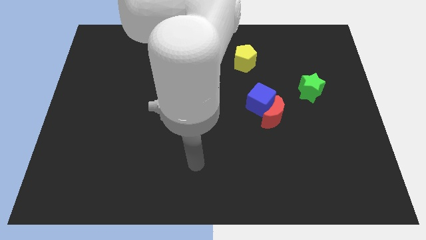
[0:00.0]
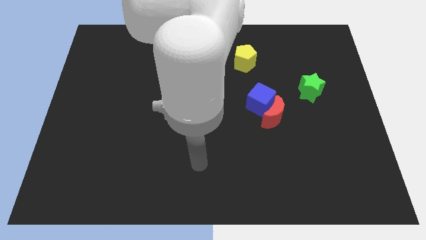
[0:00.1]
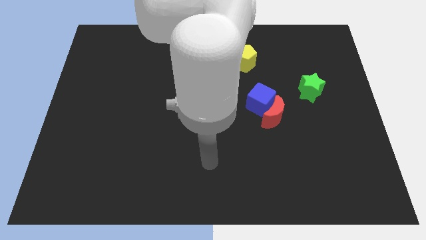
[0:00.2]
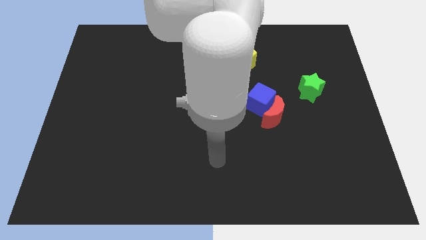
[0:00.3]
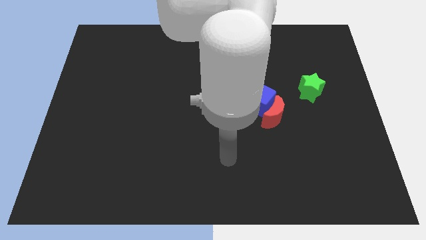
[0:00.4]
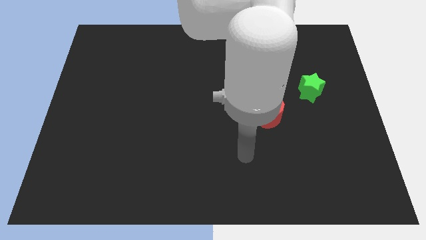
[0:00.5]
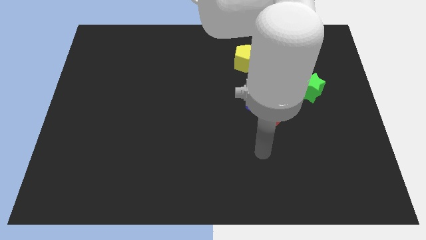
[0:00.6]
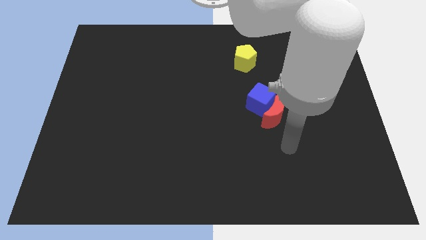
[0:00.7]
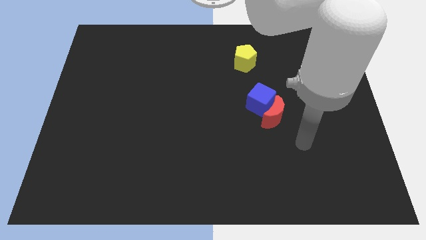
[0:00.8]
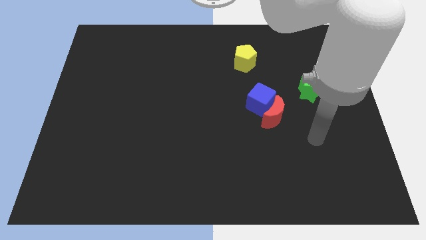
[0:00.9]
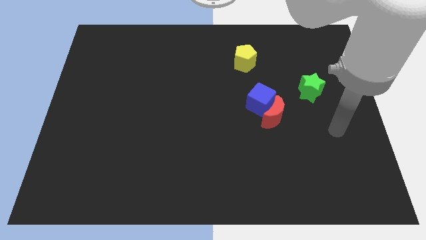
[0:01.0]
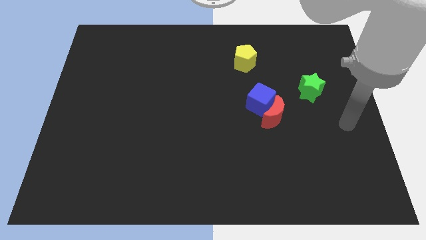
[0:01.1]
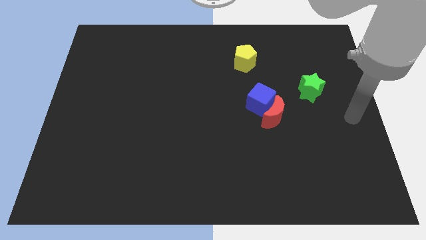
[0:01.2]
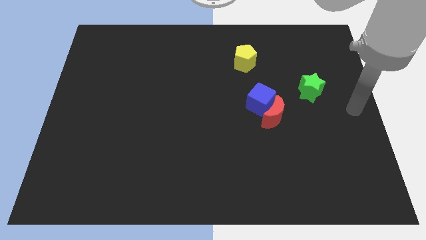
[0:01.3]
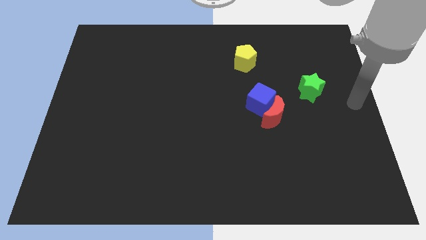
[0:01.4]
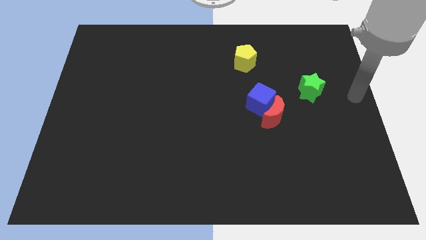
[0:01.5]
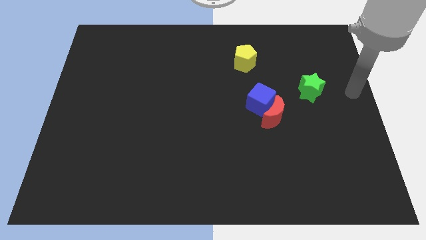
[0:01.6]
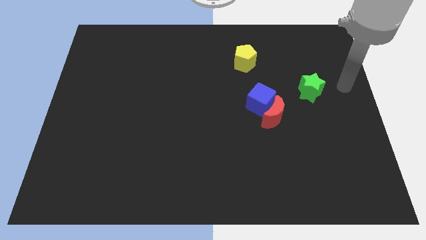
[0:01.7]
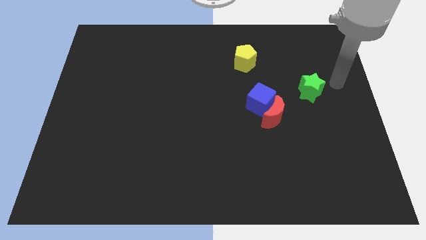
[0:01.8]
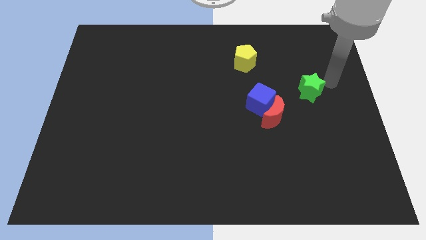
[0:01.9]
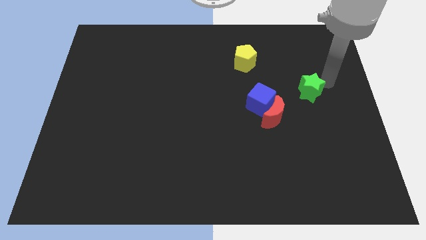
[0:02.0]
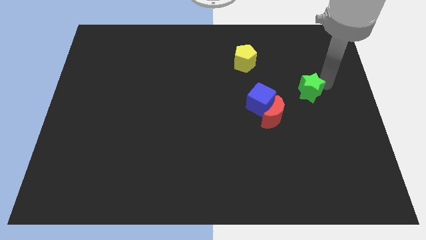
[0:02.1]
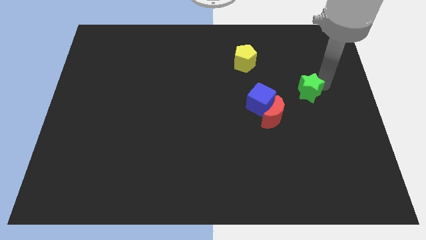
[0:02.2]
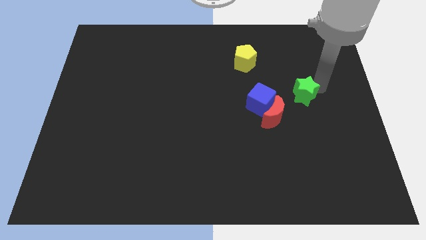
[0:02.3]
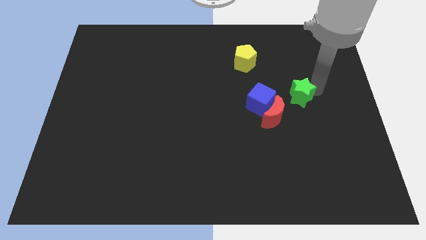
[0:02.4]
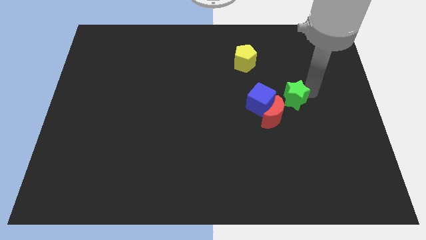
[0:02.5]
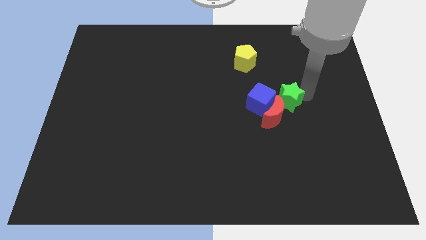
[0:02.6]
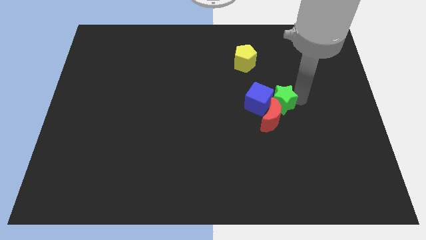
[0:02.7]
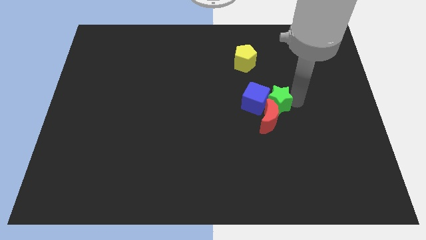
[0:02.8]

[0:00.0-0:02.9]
move the green star close to the red block

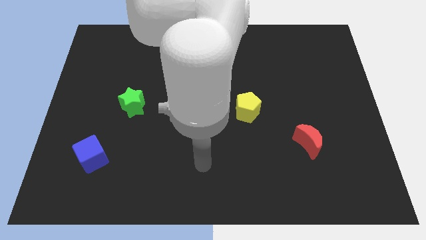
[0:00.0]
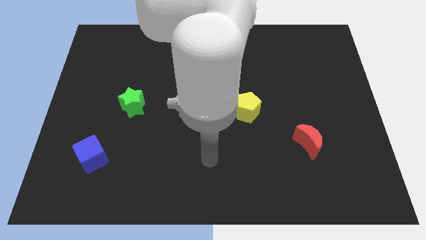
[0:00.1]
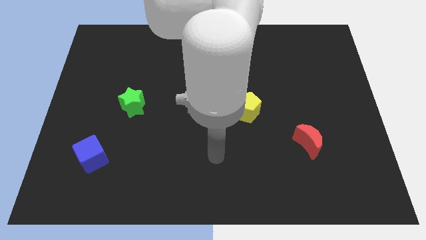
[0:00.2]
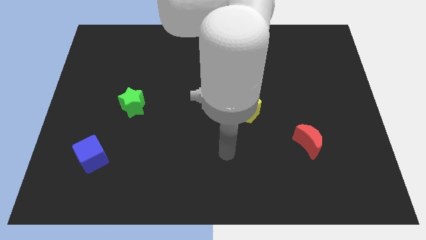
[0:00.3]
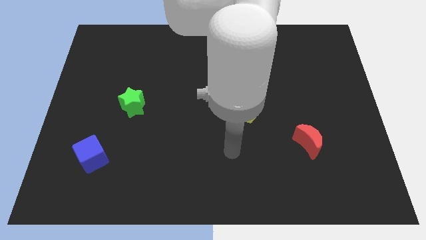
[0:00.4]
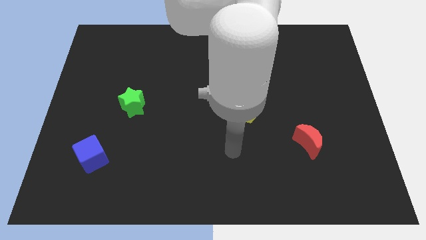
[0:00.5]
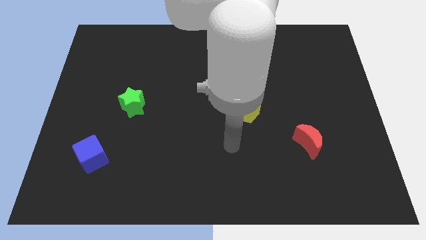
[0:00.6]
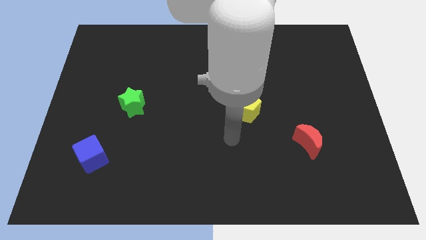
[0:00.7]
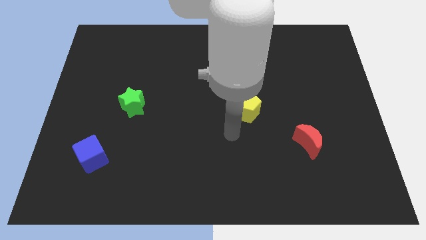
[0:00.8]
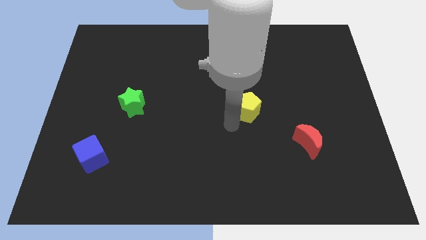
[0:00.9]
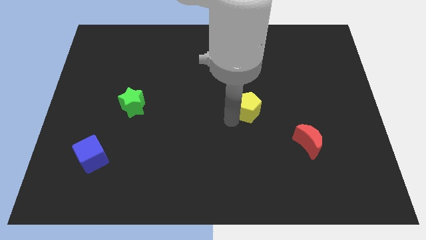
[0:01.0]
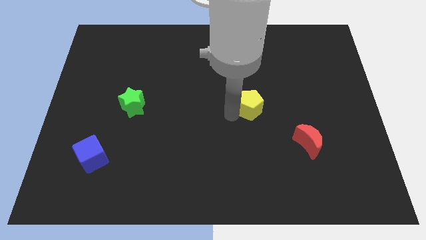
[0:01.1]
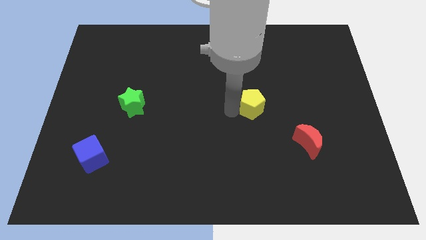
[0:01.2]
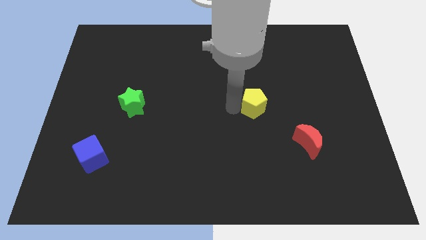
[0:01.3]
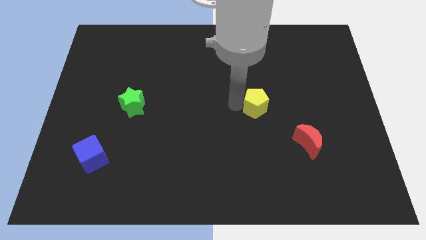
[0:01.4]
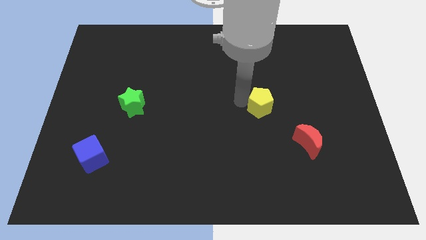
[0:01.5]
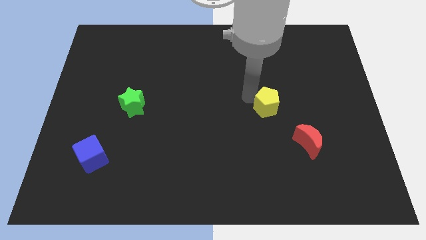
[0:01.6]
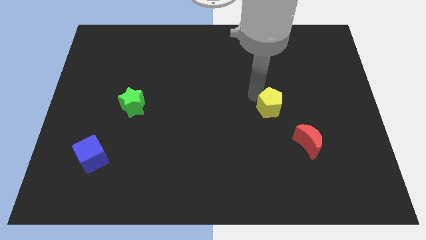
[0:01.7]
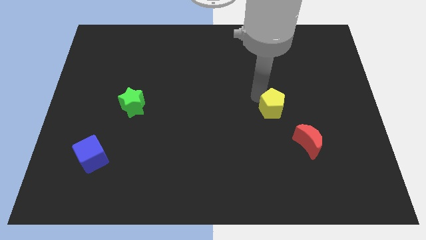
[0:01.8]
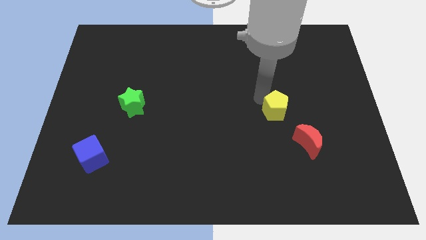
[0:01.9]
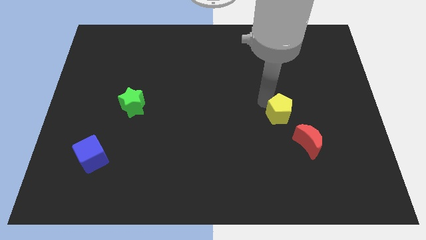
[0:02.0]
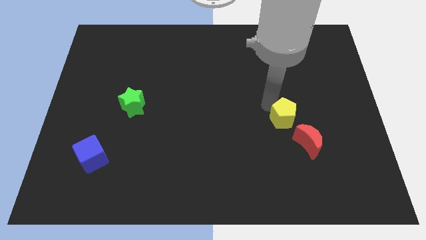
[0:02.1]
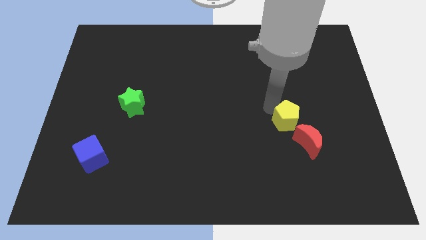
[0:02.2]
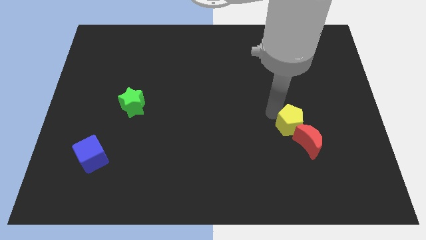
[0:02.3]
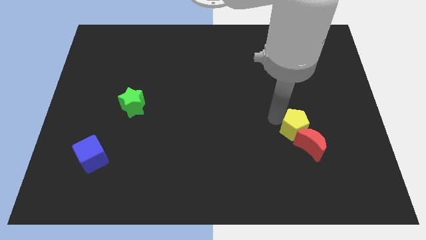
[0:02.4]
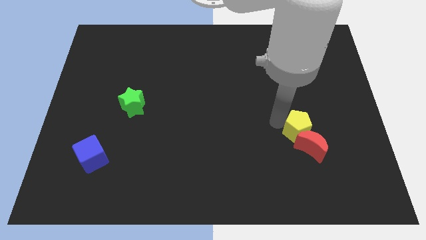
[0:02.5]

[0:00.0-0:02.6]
move the pentagon to the red block

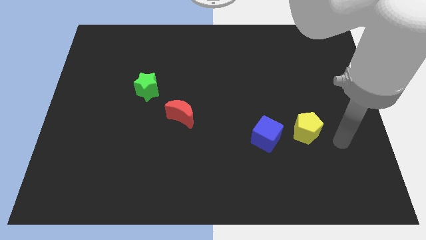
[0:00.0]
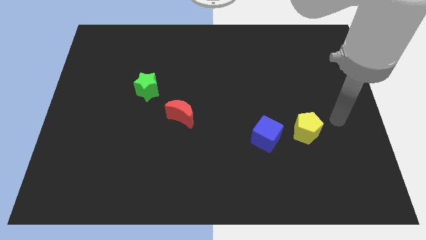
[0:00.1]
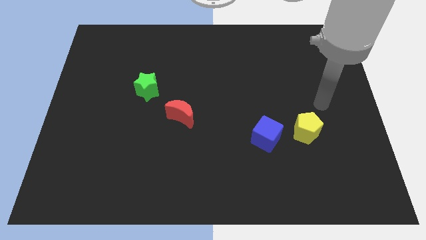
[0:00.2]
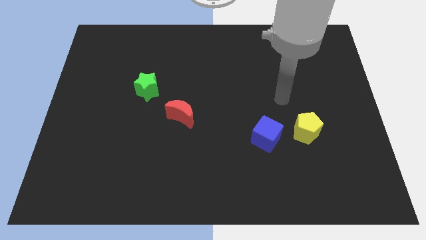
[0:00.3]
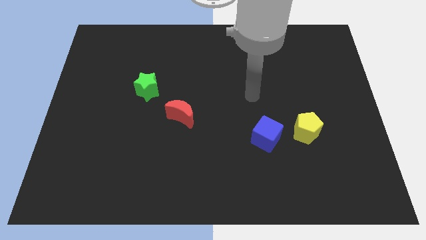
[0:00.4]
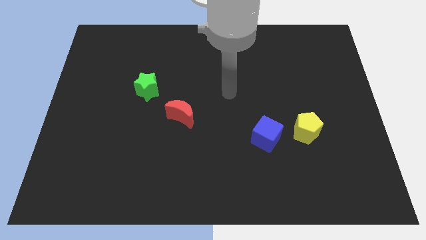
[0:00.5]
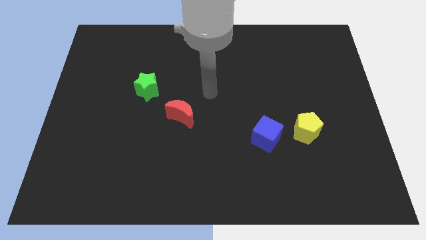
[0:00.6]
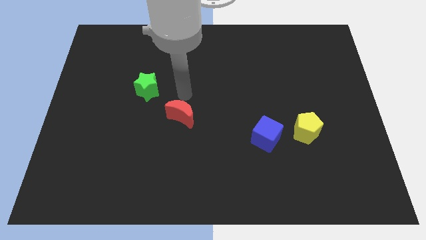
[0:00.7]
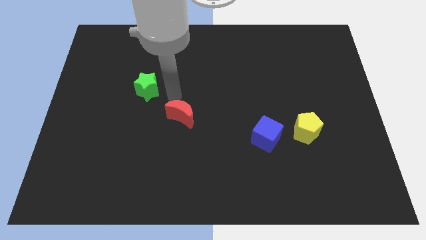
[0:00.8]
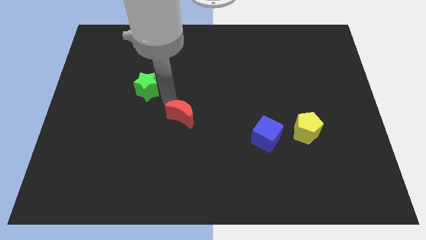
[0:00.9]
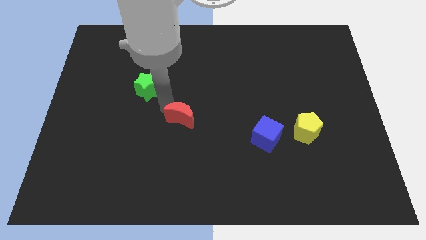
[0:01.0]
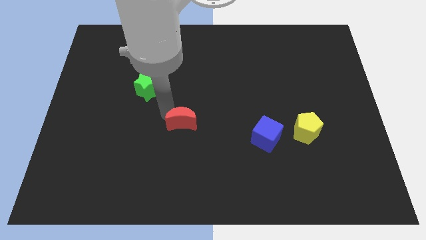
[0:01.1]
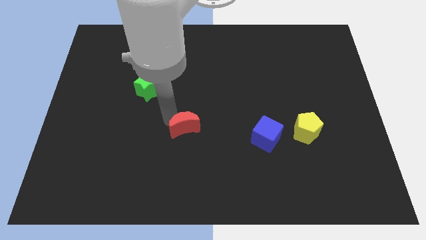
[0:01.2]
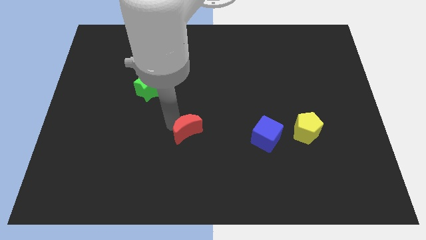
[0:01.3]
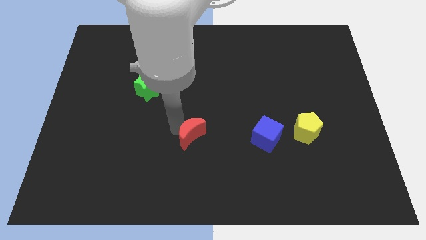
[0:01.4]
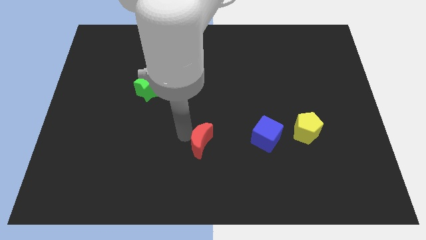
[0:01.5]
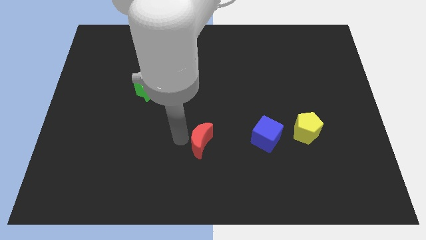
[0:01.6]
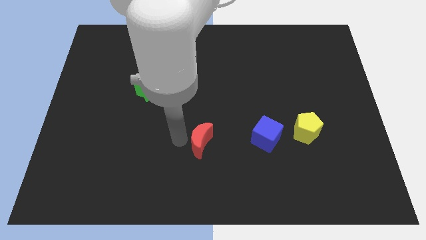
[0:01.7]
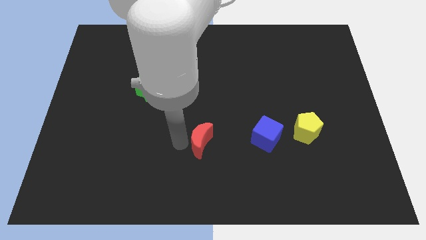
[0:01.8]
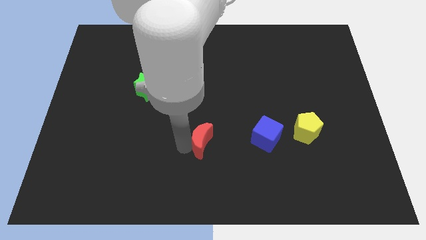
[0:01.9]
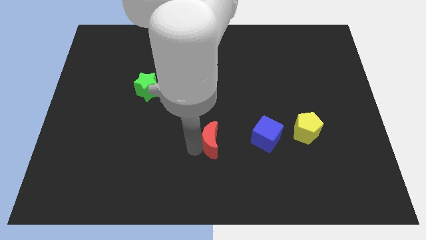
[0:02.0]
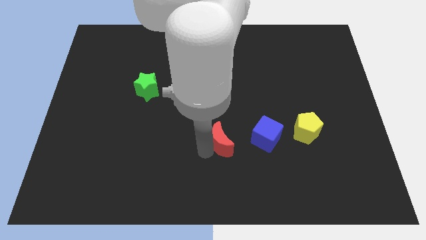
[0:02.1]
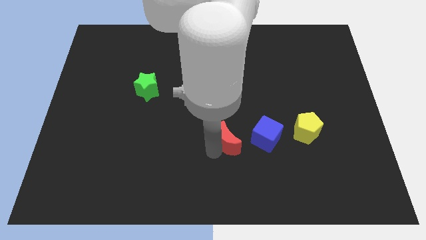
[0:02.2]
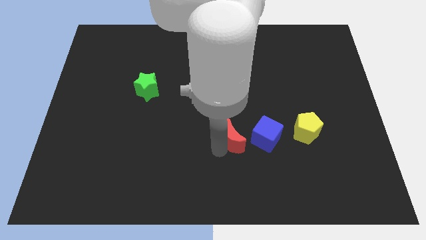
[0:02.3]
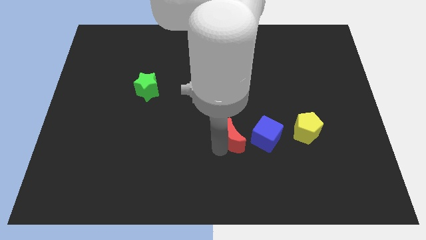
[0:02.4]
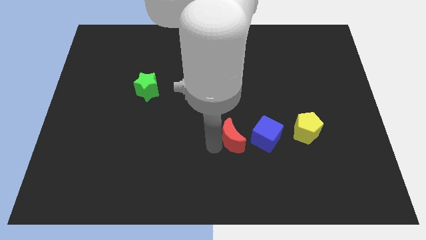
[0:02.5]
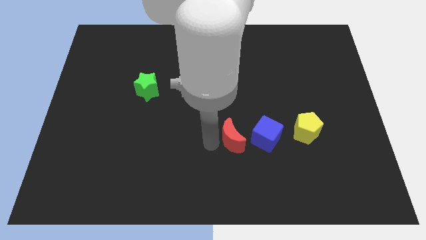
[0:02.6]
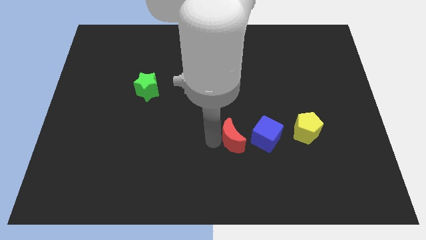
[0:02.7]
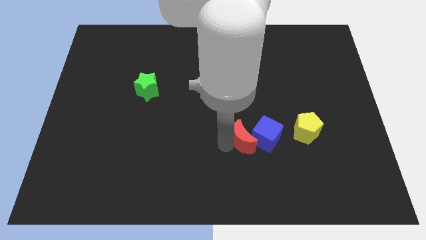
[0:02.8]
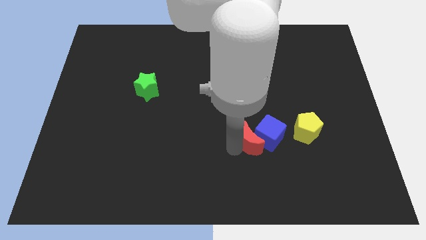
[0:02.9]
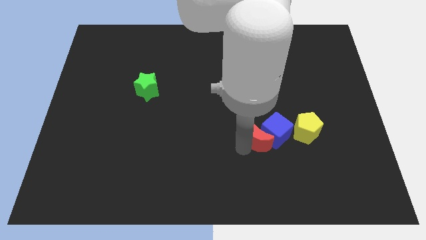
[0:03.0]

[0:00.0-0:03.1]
move the moon next to the cube
